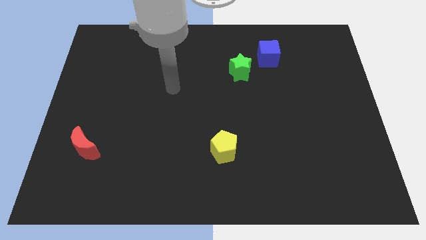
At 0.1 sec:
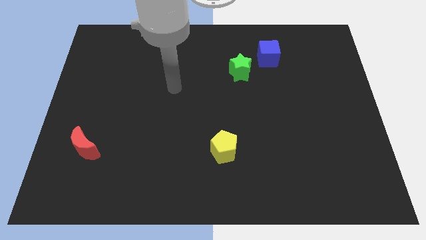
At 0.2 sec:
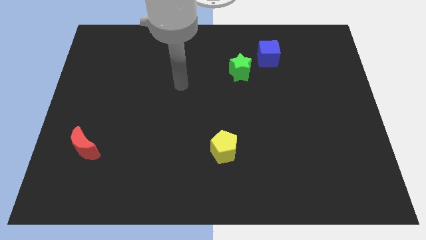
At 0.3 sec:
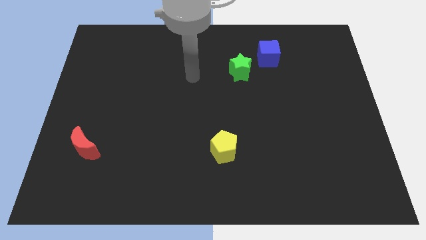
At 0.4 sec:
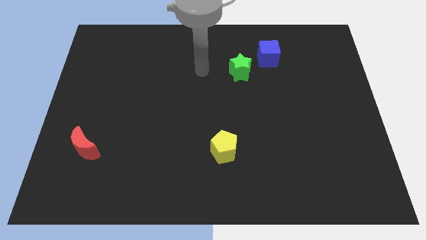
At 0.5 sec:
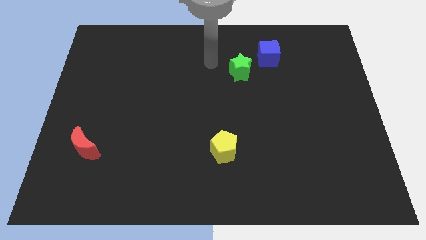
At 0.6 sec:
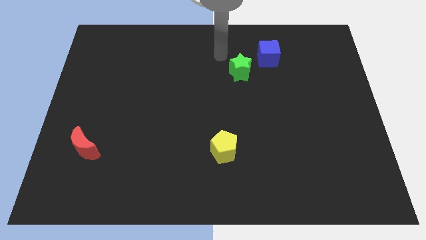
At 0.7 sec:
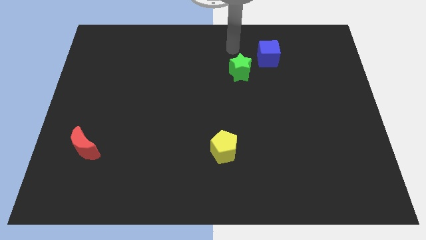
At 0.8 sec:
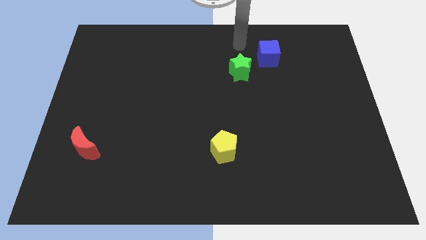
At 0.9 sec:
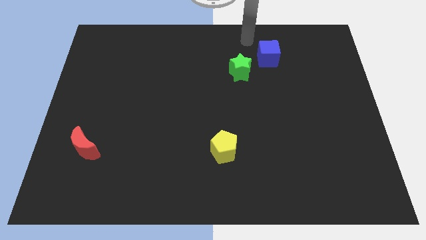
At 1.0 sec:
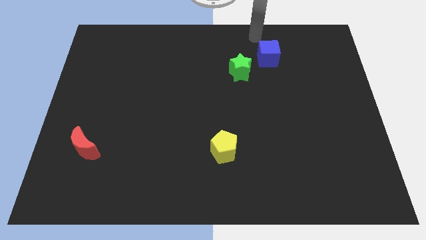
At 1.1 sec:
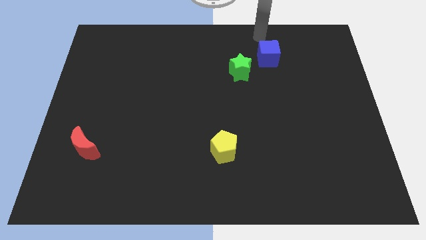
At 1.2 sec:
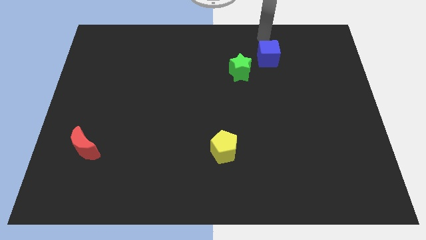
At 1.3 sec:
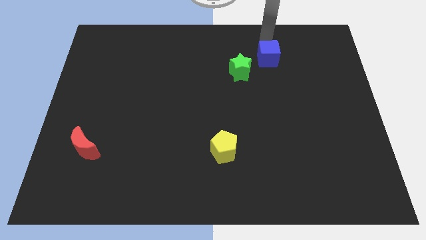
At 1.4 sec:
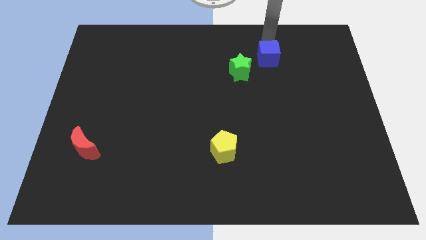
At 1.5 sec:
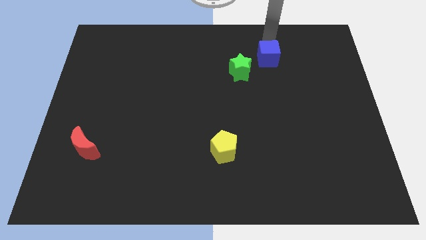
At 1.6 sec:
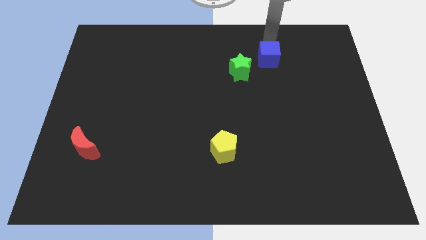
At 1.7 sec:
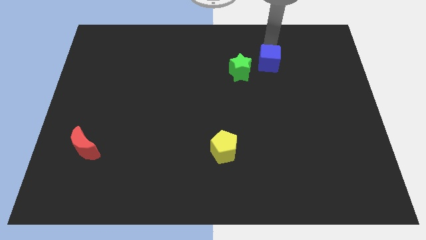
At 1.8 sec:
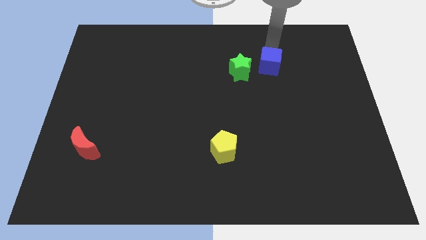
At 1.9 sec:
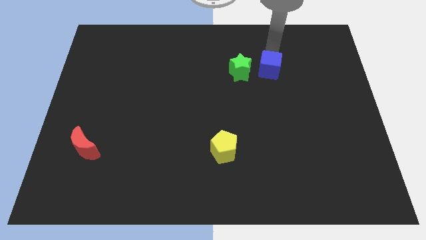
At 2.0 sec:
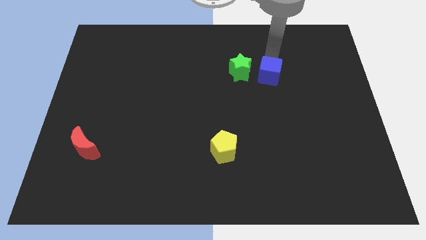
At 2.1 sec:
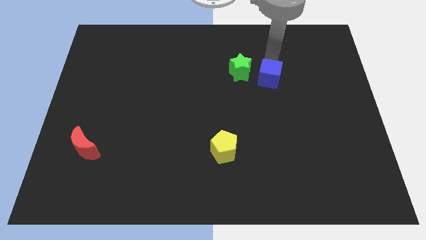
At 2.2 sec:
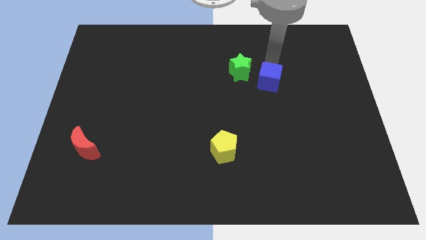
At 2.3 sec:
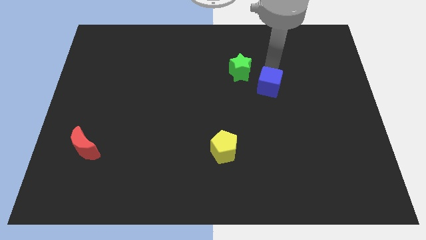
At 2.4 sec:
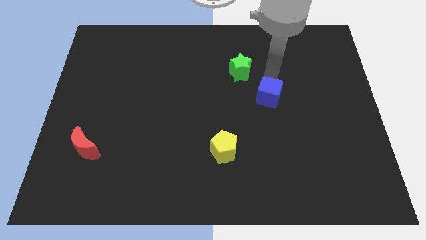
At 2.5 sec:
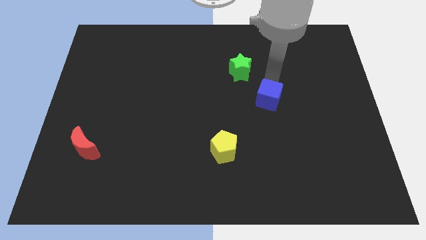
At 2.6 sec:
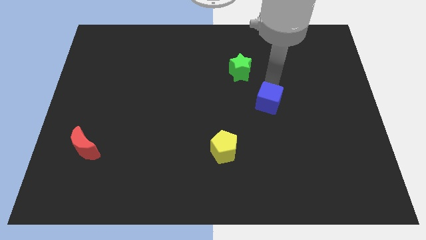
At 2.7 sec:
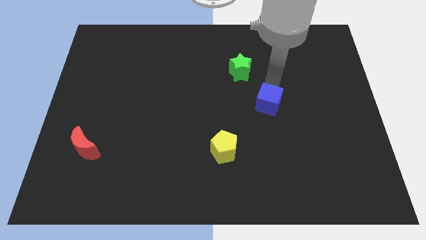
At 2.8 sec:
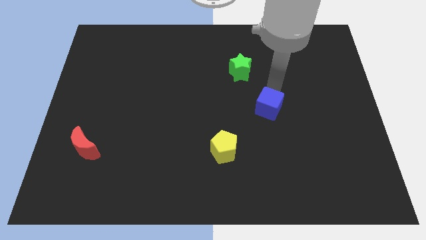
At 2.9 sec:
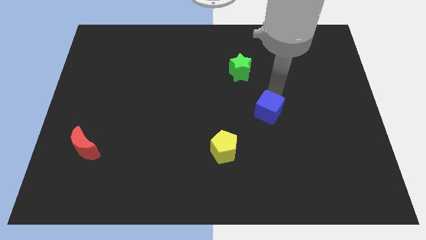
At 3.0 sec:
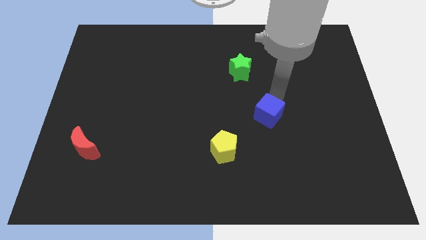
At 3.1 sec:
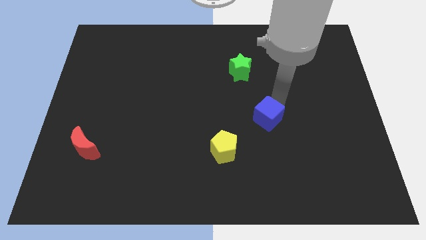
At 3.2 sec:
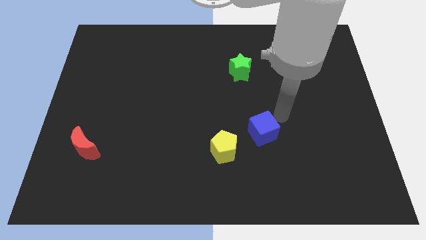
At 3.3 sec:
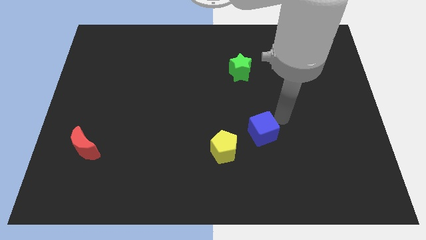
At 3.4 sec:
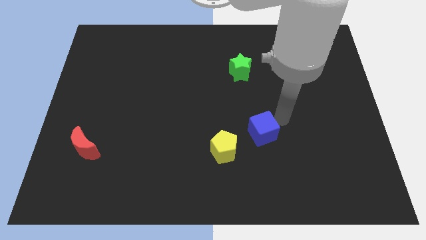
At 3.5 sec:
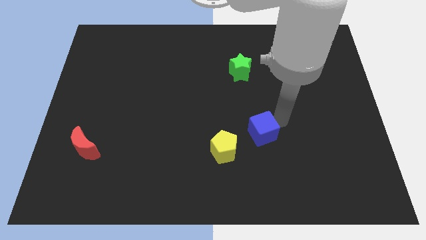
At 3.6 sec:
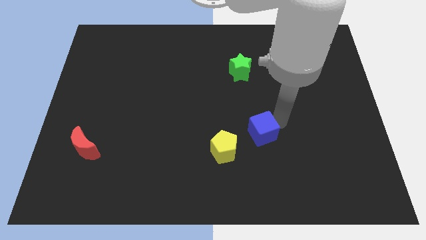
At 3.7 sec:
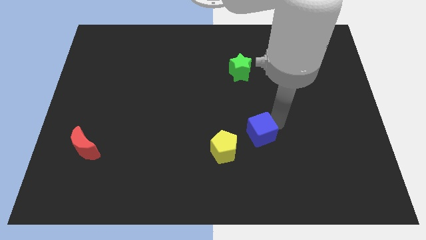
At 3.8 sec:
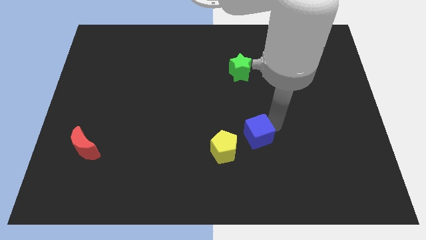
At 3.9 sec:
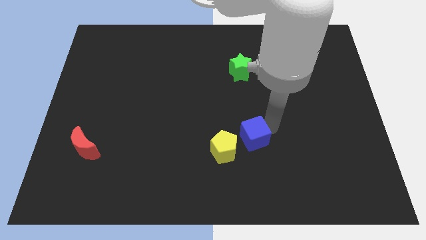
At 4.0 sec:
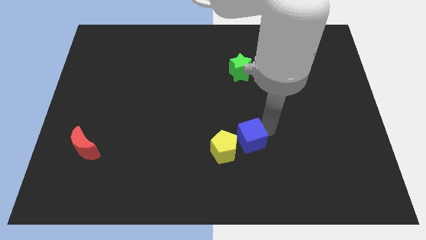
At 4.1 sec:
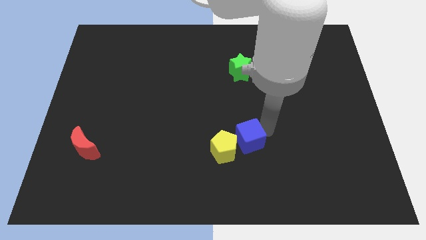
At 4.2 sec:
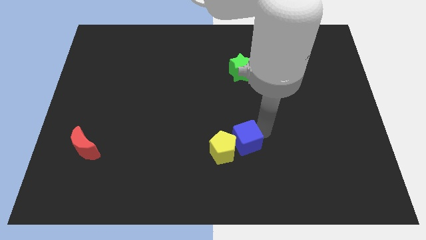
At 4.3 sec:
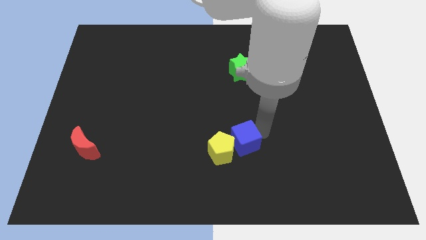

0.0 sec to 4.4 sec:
put the blue cube towards the yellow pentagon

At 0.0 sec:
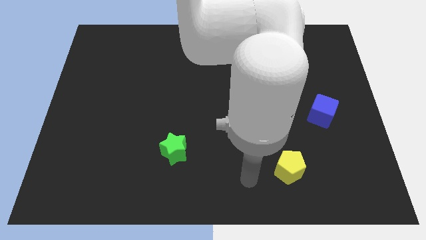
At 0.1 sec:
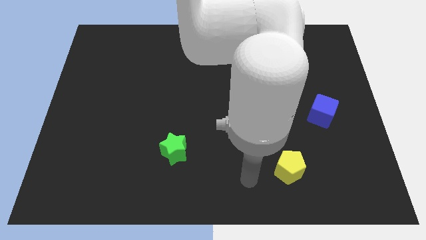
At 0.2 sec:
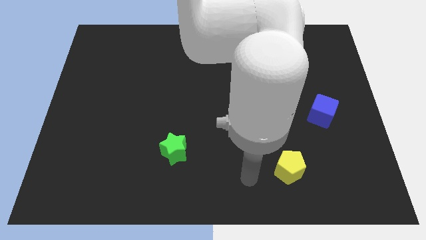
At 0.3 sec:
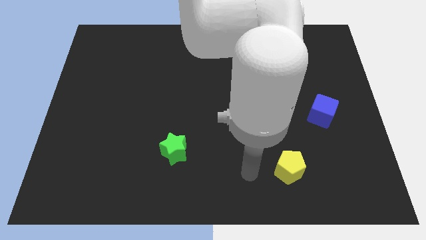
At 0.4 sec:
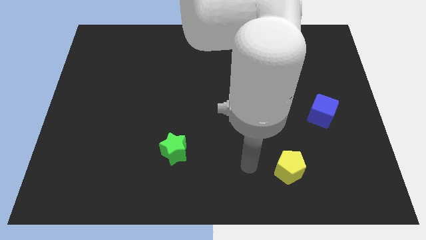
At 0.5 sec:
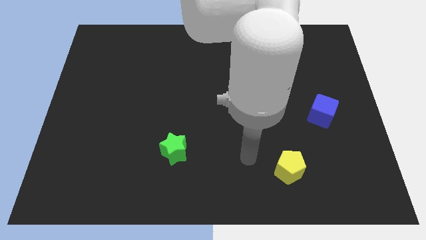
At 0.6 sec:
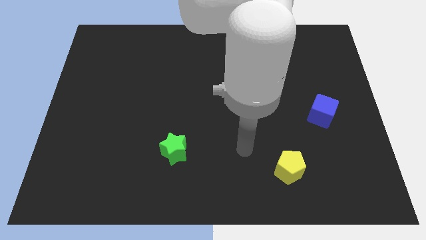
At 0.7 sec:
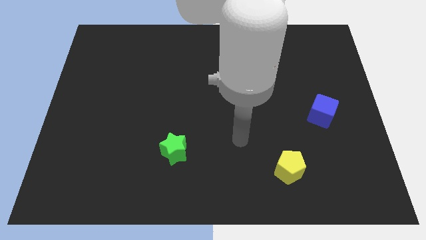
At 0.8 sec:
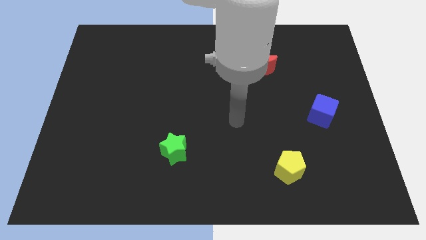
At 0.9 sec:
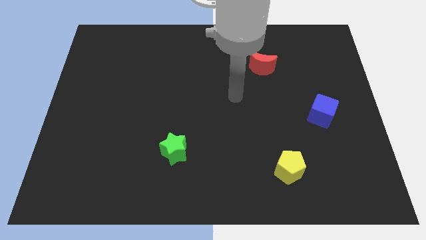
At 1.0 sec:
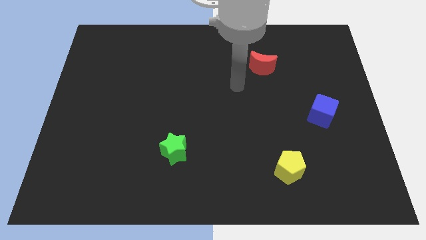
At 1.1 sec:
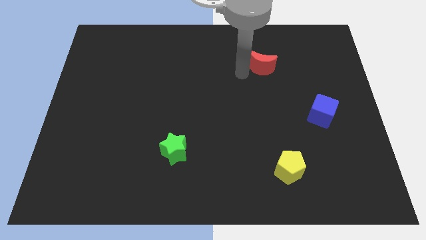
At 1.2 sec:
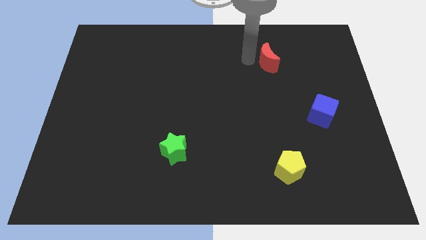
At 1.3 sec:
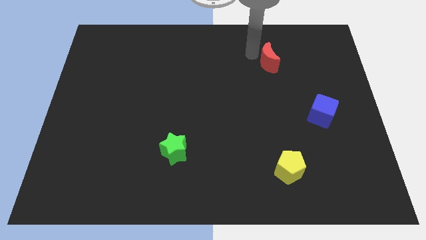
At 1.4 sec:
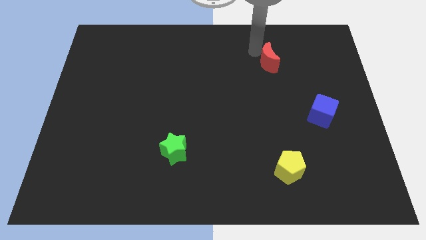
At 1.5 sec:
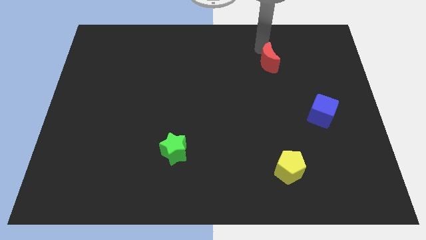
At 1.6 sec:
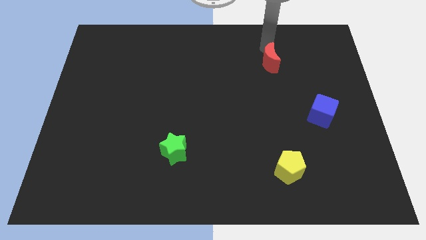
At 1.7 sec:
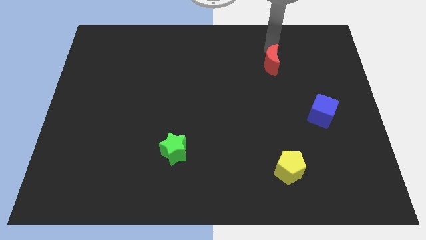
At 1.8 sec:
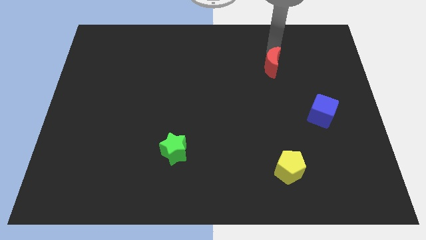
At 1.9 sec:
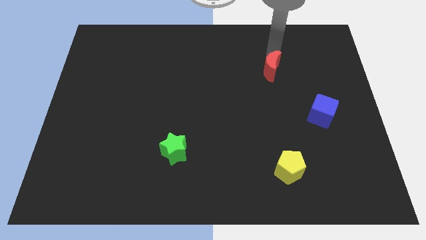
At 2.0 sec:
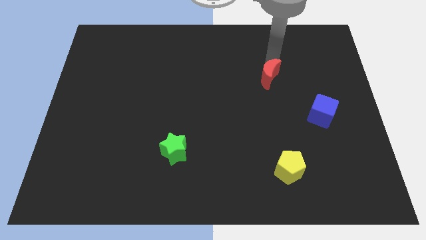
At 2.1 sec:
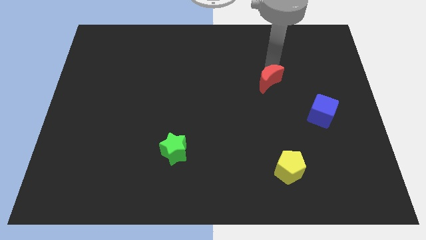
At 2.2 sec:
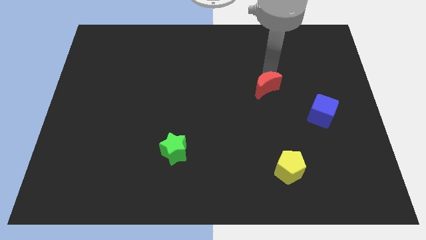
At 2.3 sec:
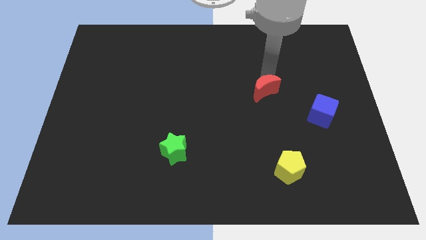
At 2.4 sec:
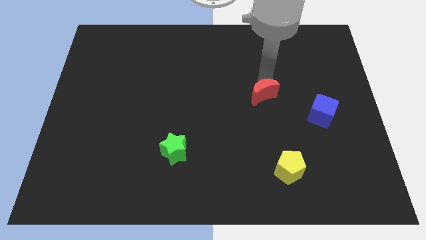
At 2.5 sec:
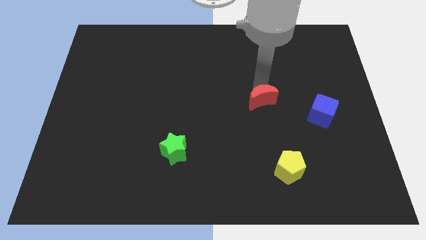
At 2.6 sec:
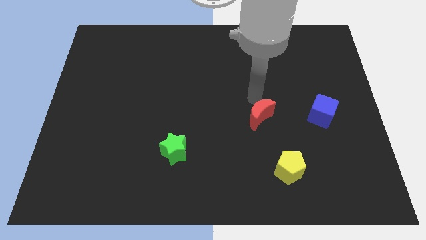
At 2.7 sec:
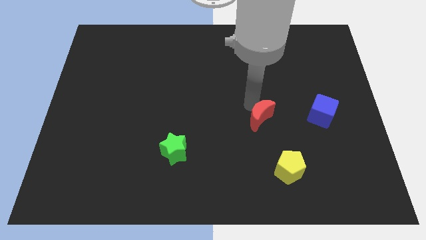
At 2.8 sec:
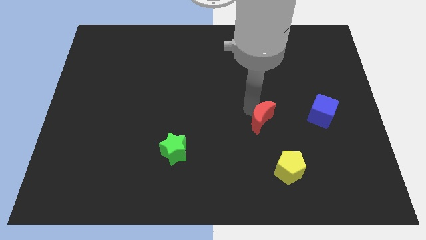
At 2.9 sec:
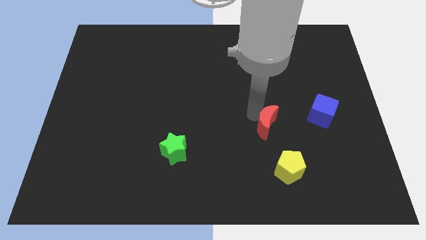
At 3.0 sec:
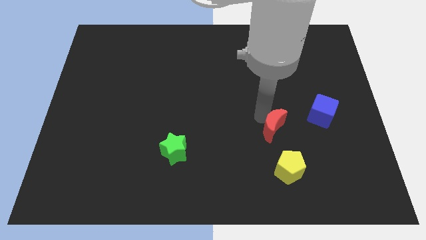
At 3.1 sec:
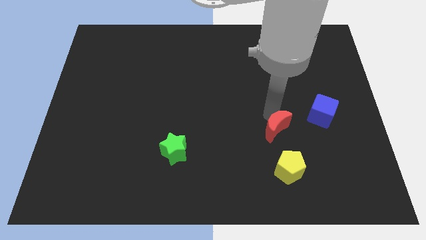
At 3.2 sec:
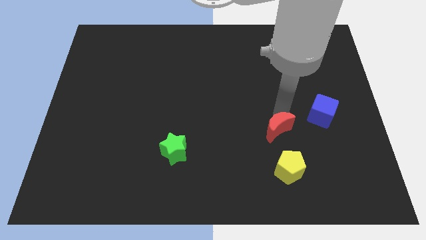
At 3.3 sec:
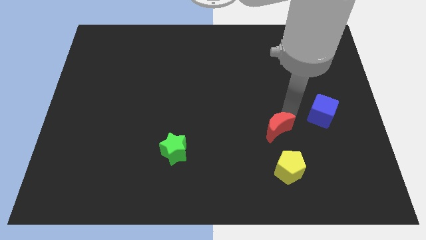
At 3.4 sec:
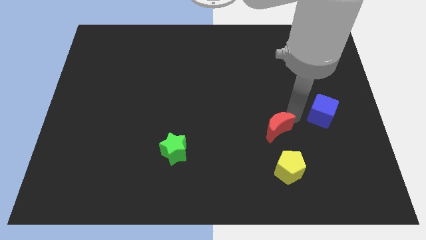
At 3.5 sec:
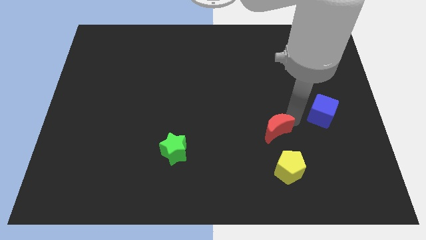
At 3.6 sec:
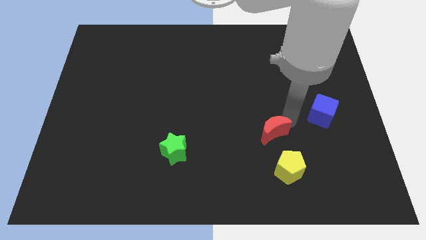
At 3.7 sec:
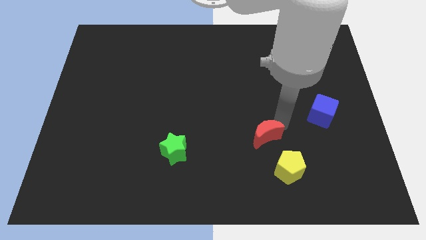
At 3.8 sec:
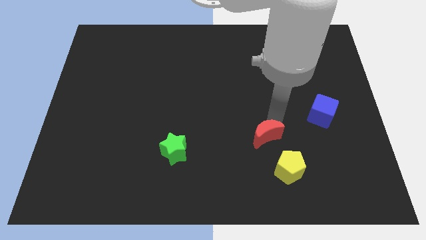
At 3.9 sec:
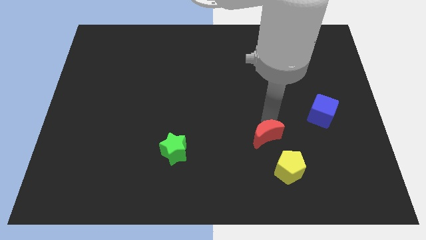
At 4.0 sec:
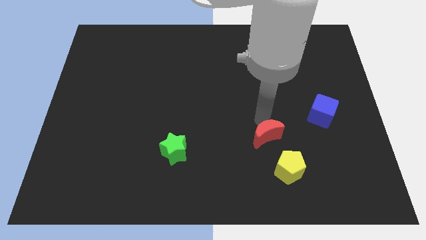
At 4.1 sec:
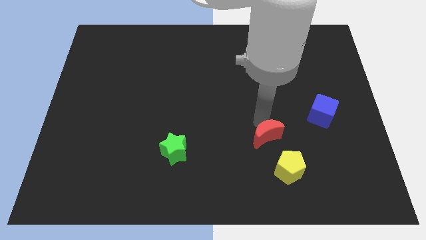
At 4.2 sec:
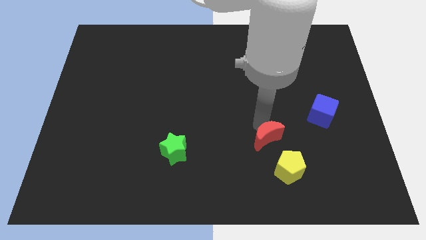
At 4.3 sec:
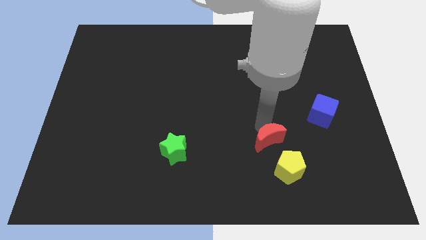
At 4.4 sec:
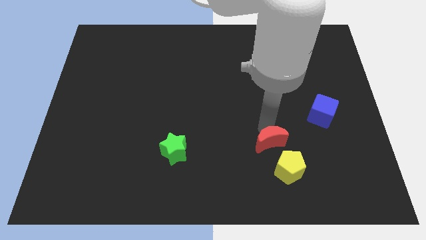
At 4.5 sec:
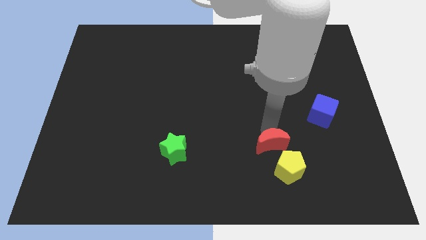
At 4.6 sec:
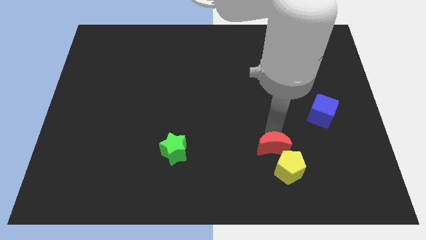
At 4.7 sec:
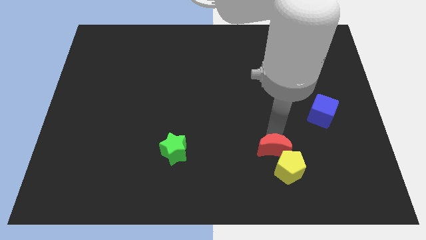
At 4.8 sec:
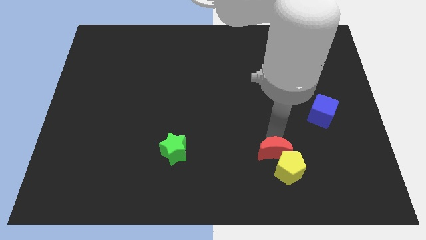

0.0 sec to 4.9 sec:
move the red moon close to the yellow pentagon
